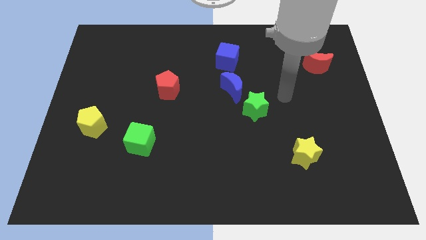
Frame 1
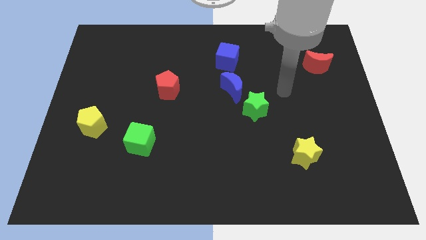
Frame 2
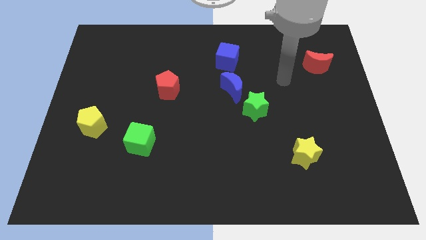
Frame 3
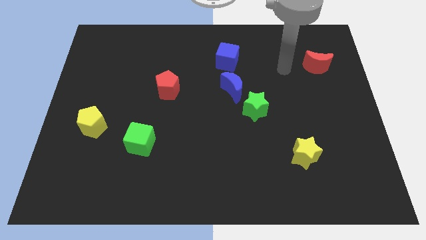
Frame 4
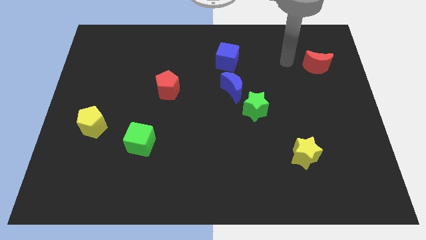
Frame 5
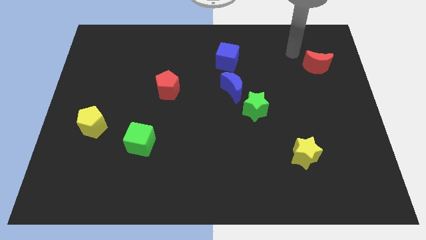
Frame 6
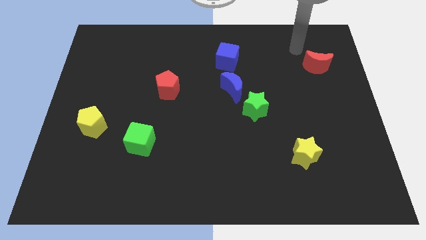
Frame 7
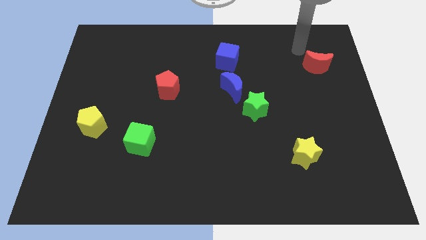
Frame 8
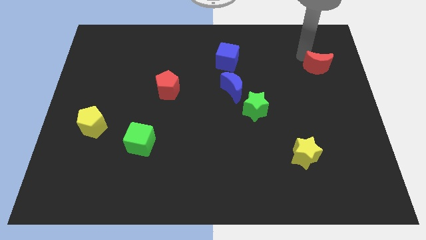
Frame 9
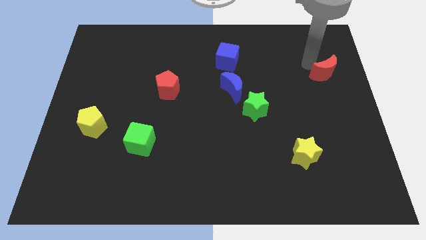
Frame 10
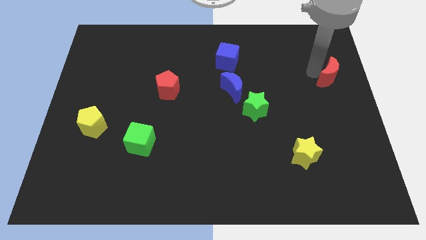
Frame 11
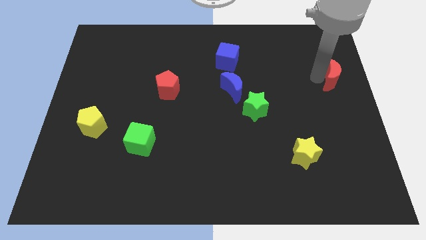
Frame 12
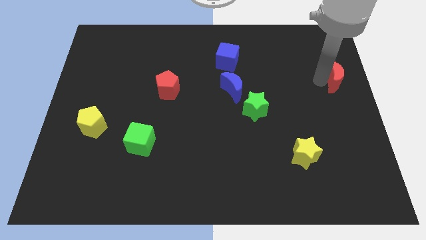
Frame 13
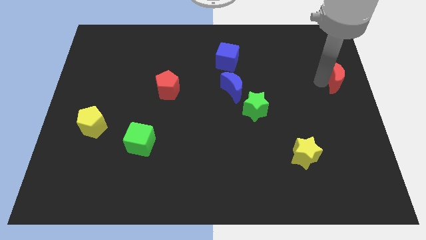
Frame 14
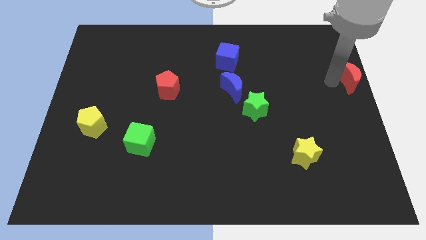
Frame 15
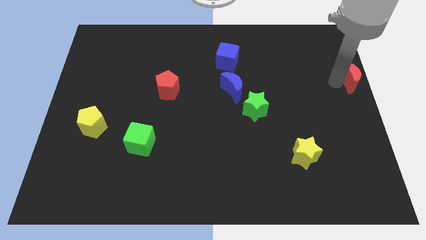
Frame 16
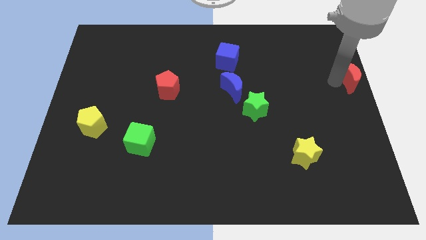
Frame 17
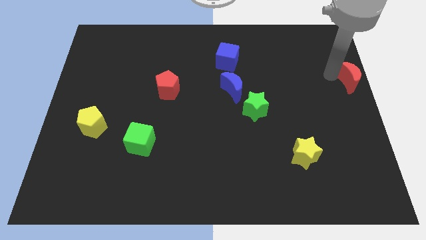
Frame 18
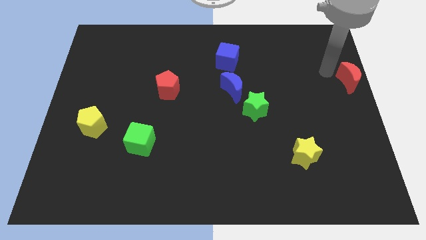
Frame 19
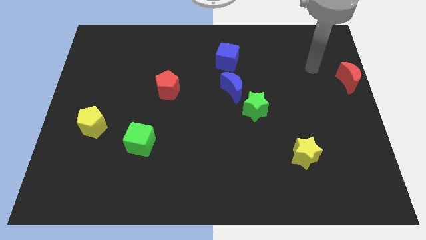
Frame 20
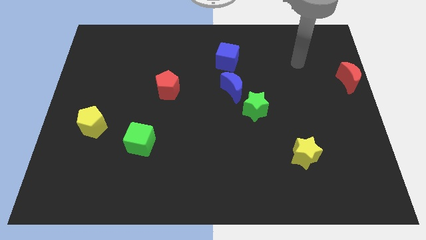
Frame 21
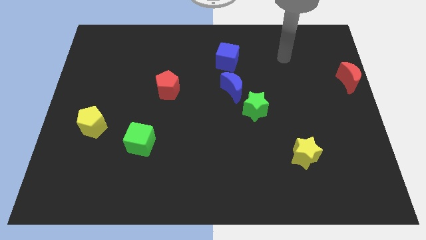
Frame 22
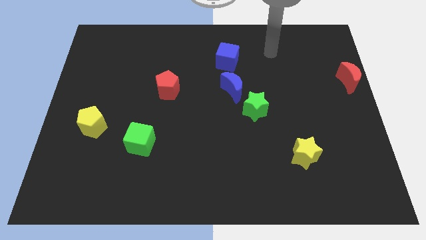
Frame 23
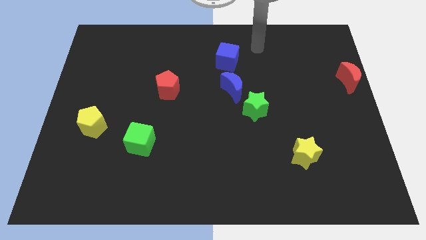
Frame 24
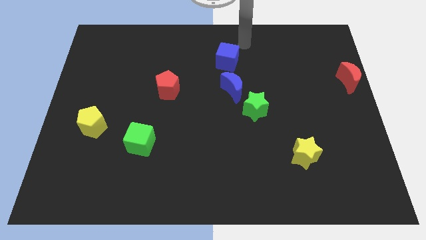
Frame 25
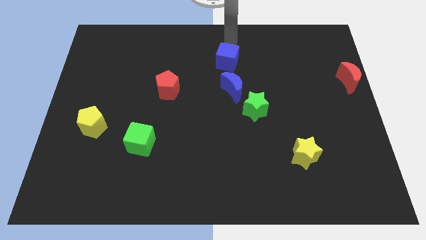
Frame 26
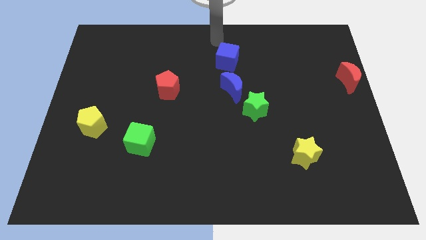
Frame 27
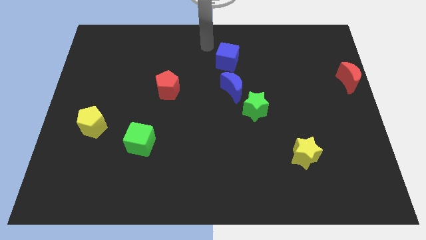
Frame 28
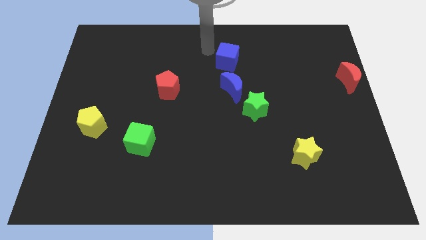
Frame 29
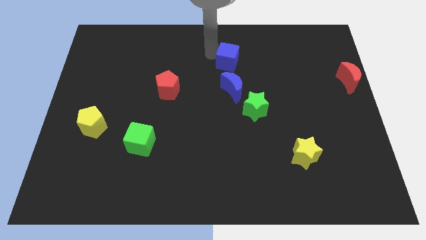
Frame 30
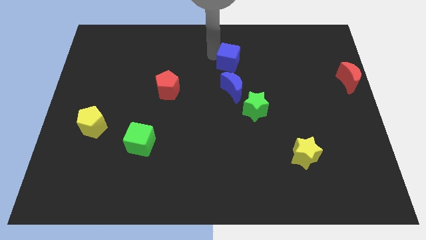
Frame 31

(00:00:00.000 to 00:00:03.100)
move the red moon to center right

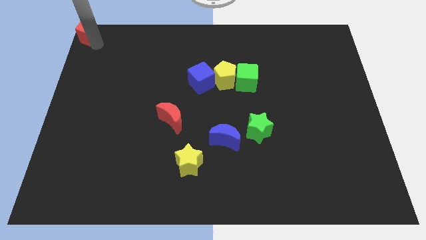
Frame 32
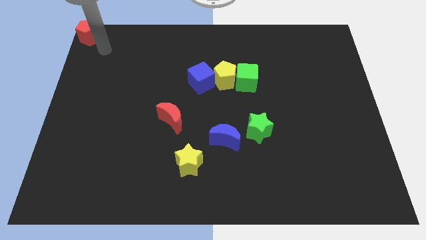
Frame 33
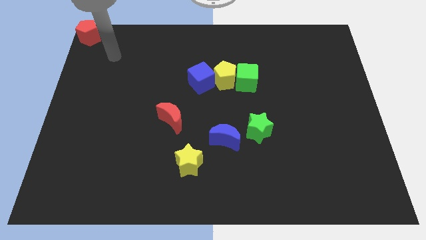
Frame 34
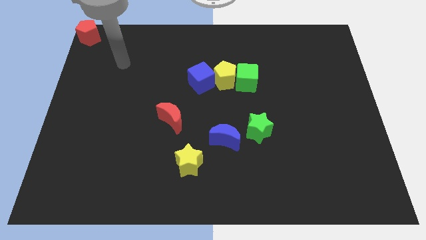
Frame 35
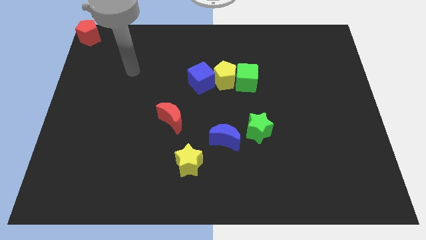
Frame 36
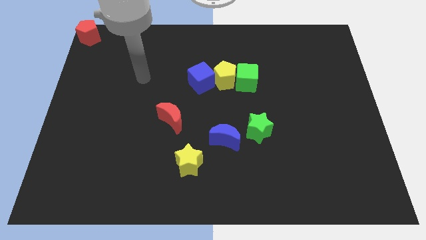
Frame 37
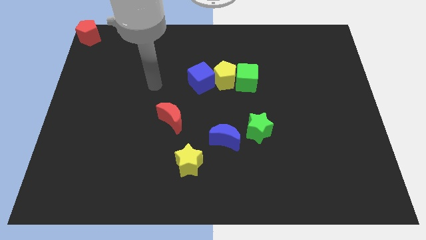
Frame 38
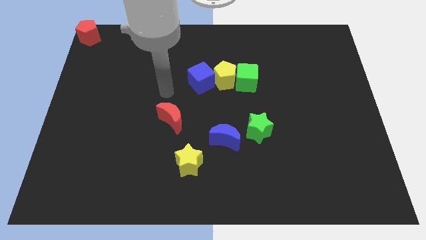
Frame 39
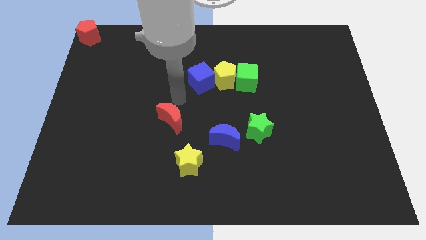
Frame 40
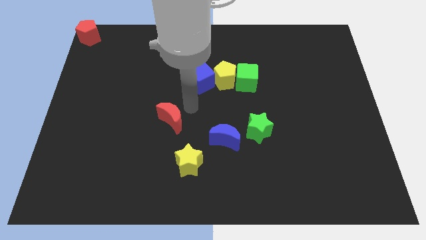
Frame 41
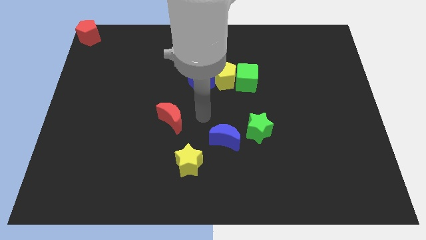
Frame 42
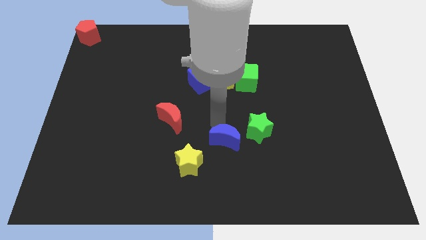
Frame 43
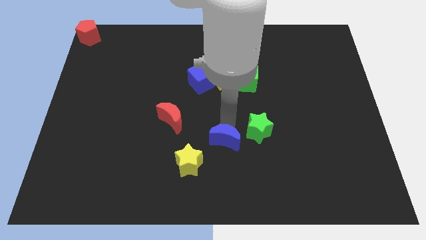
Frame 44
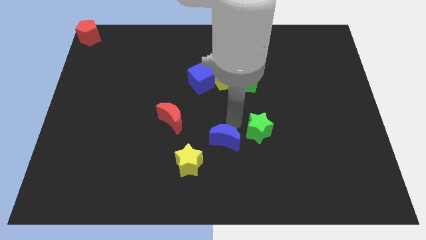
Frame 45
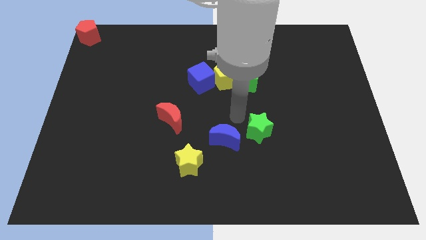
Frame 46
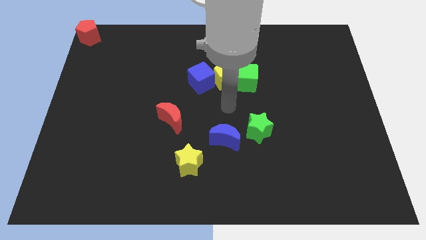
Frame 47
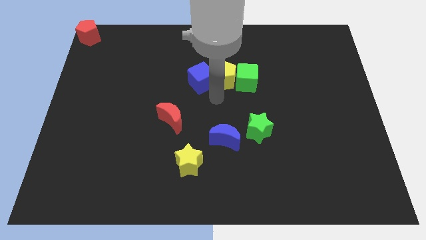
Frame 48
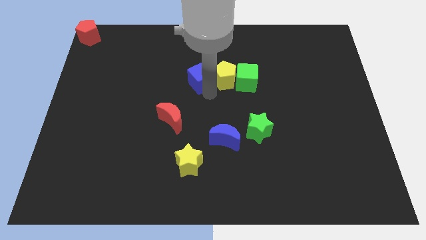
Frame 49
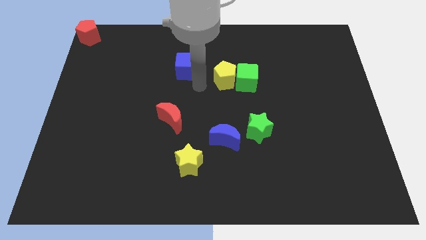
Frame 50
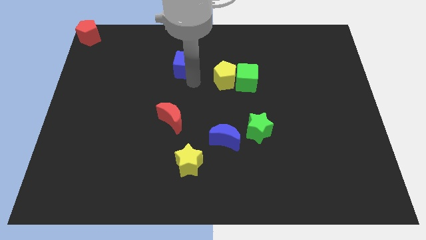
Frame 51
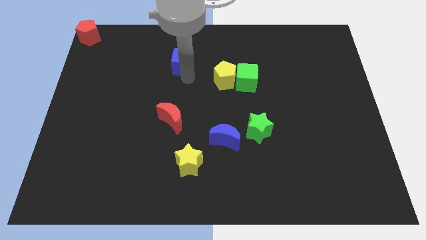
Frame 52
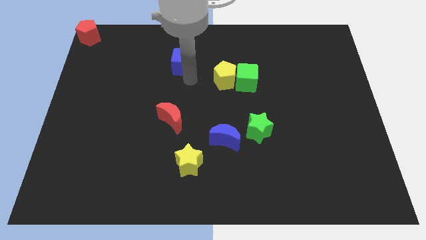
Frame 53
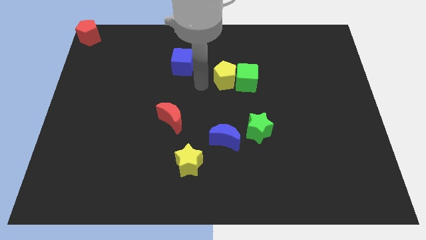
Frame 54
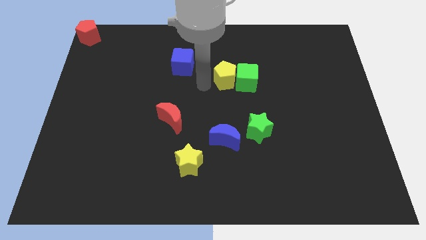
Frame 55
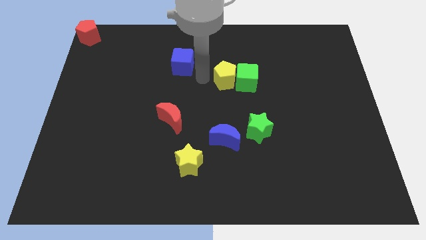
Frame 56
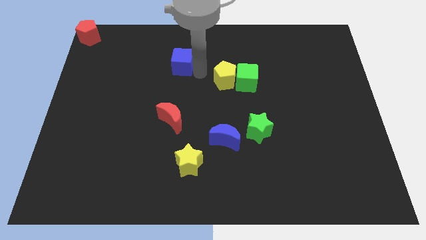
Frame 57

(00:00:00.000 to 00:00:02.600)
separate the blue cube from the yellow pentagon

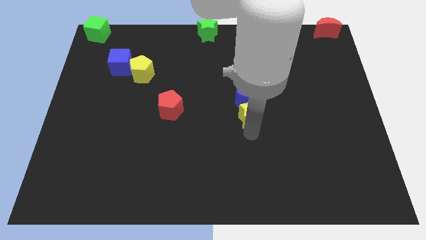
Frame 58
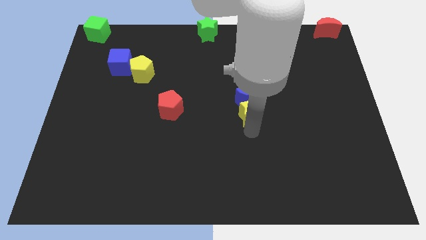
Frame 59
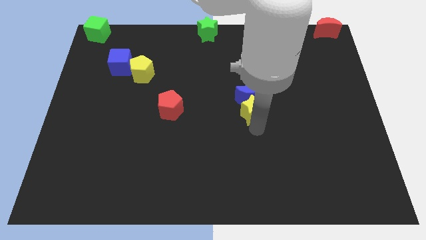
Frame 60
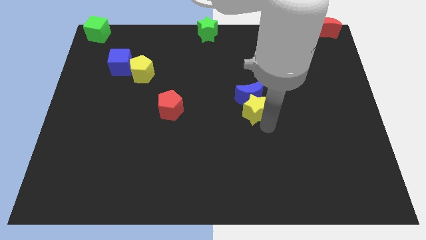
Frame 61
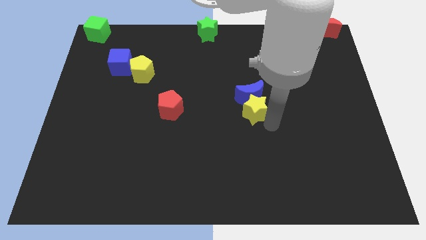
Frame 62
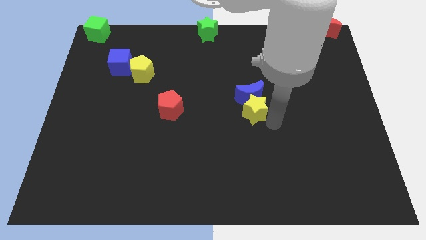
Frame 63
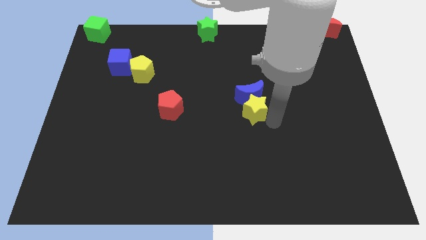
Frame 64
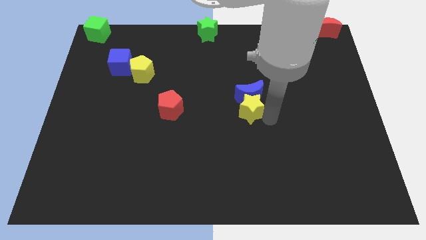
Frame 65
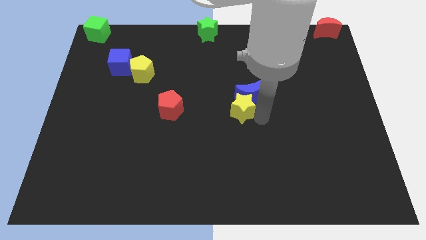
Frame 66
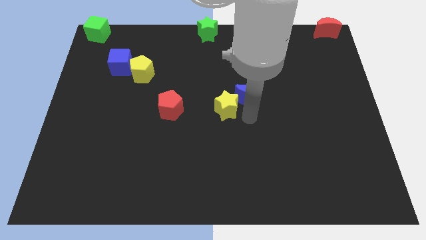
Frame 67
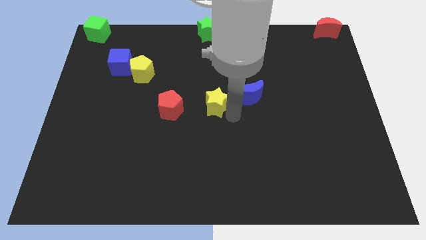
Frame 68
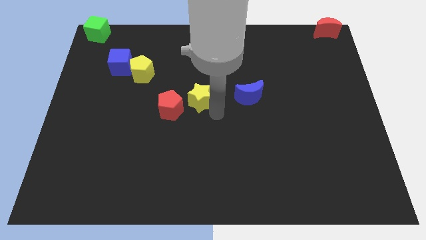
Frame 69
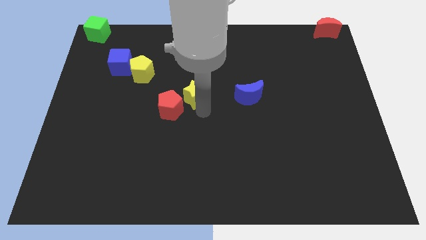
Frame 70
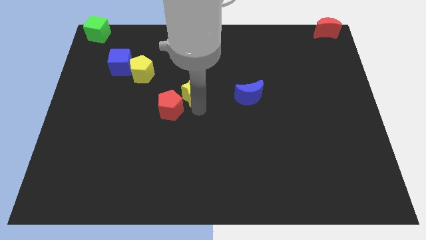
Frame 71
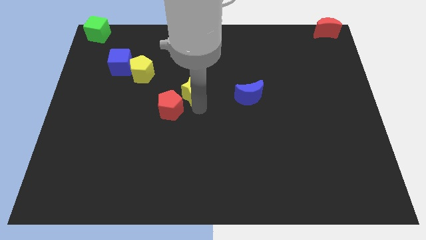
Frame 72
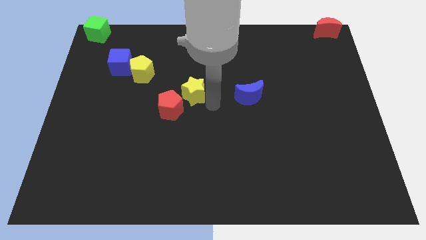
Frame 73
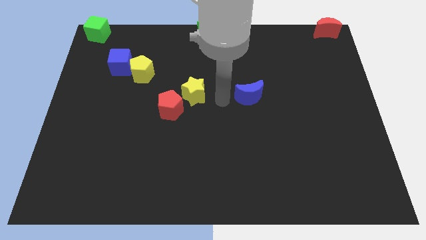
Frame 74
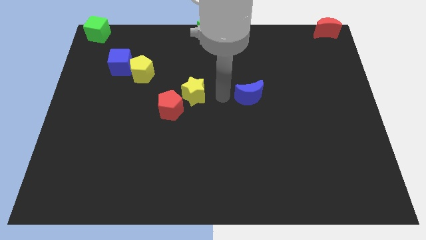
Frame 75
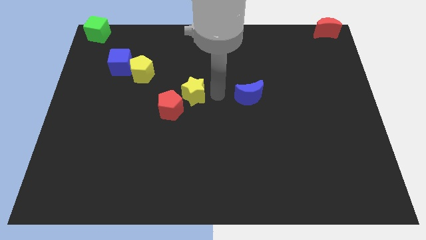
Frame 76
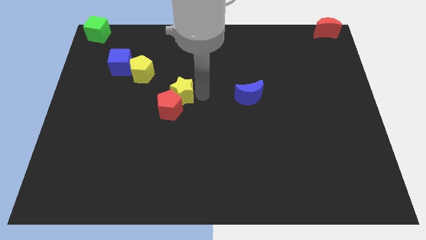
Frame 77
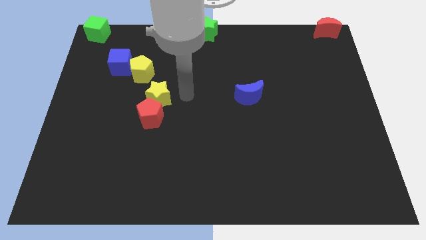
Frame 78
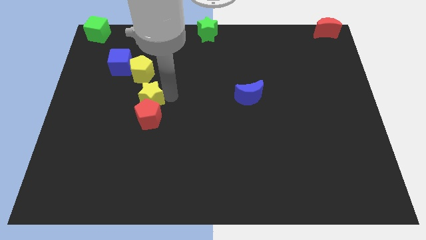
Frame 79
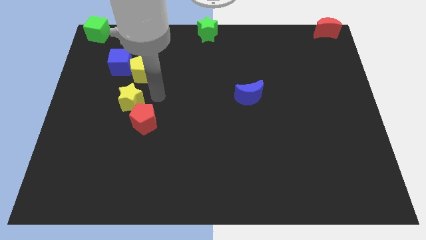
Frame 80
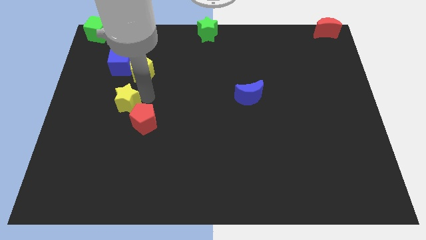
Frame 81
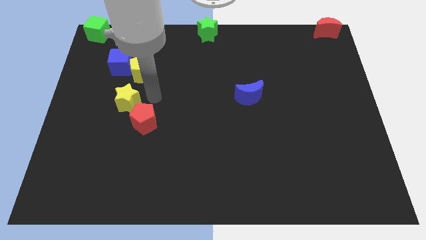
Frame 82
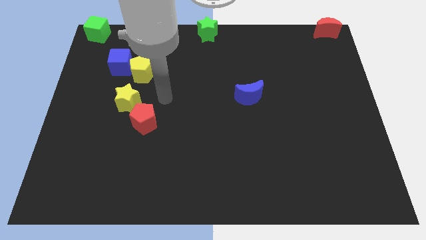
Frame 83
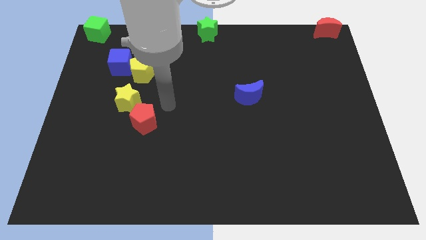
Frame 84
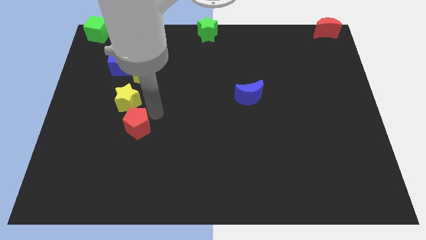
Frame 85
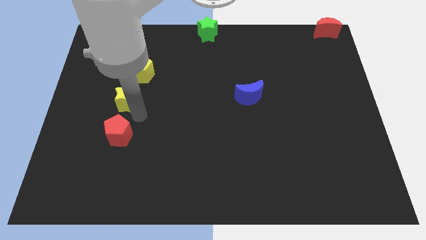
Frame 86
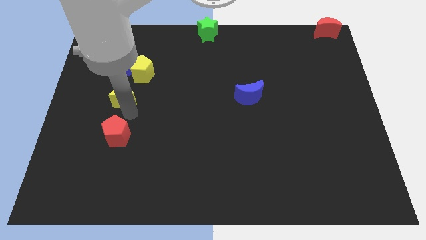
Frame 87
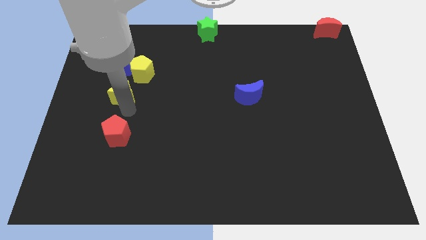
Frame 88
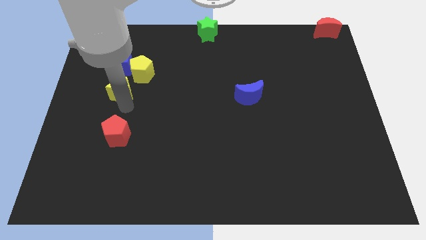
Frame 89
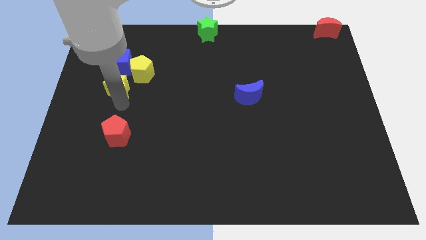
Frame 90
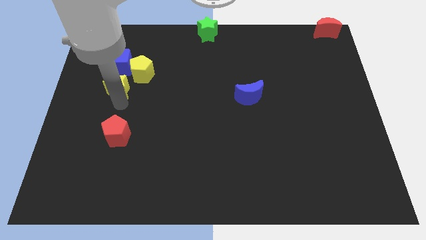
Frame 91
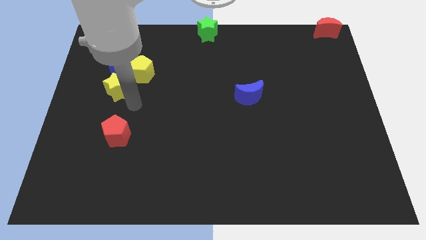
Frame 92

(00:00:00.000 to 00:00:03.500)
push yellow star below blue cube
